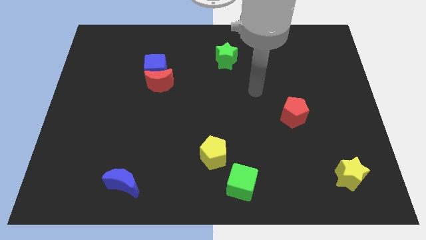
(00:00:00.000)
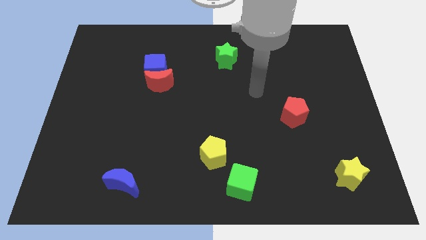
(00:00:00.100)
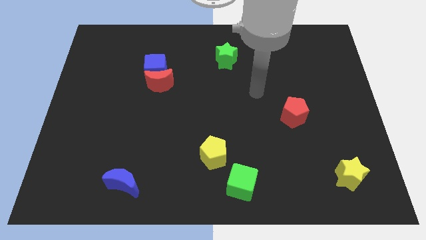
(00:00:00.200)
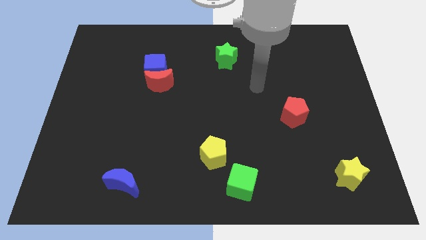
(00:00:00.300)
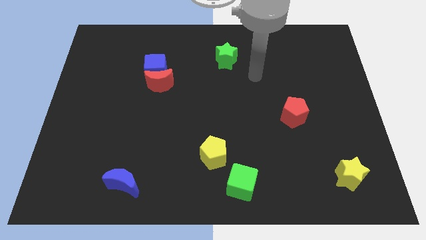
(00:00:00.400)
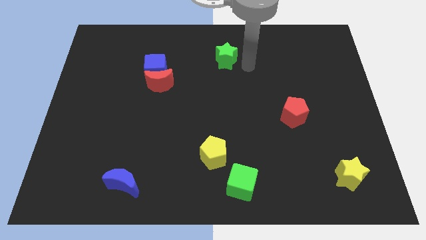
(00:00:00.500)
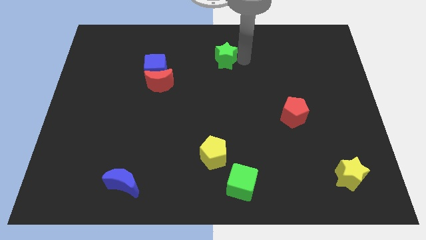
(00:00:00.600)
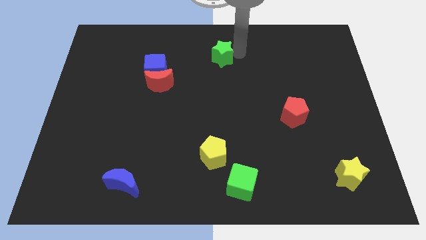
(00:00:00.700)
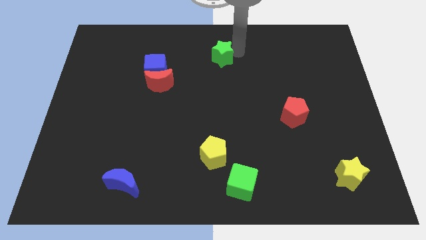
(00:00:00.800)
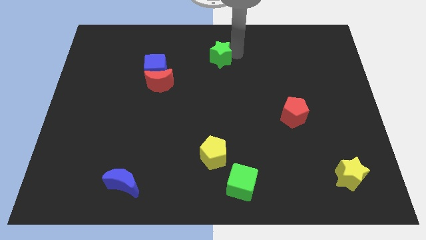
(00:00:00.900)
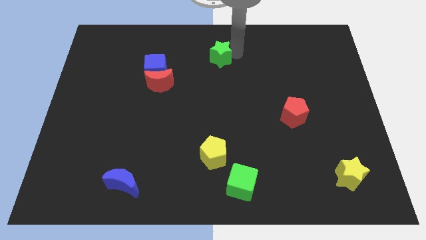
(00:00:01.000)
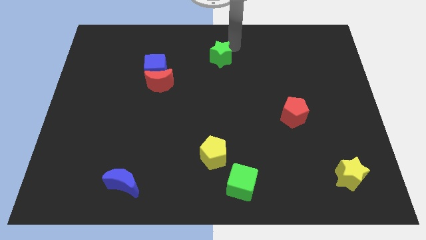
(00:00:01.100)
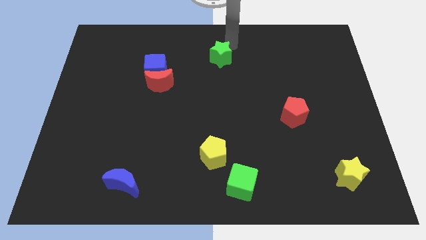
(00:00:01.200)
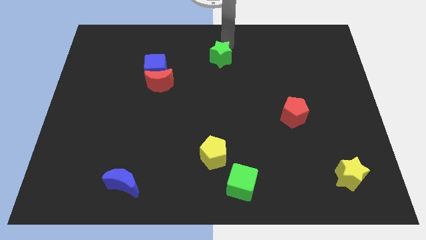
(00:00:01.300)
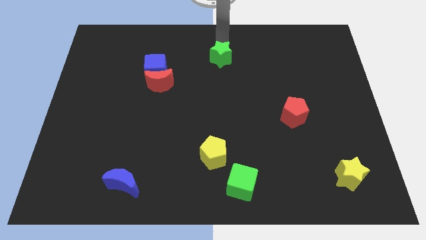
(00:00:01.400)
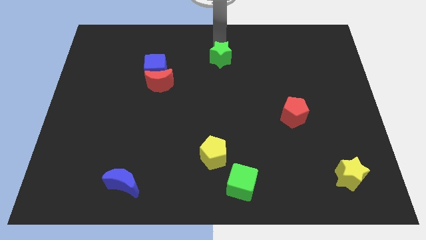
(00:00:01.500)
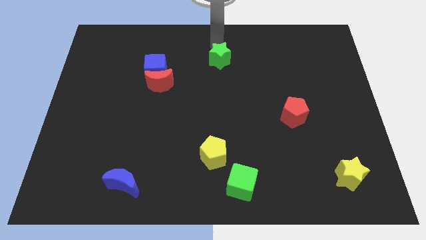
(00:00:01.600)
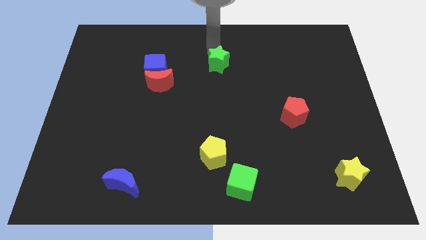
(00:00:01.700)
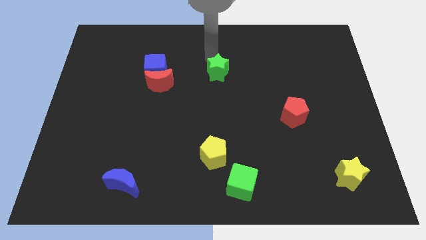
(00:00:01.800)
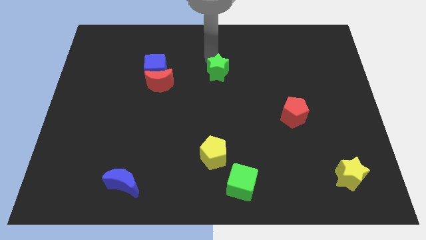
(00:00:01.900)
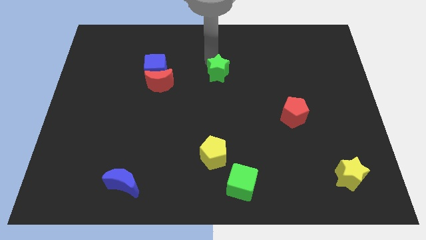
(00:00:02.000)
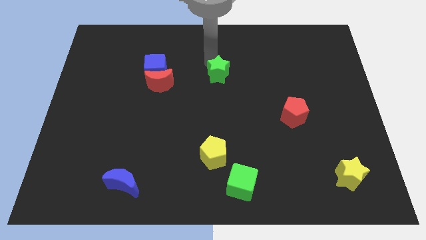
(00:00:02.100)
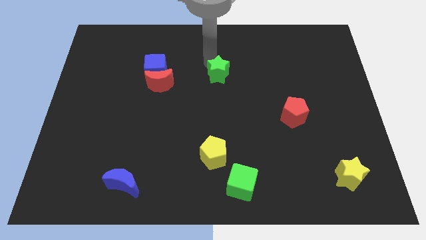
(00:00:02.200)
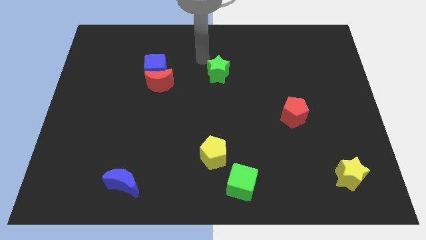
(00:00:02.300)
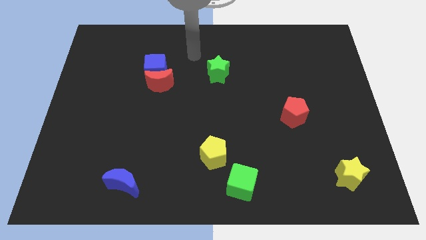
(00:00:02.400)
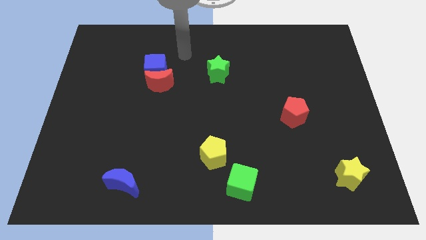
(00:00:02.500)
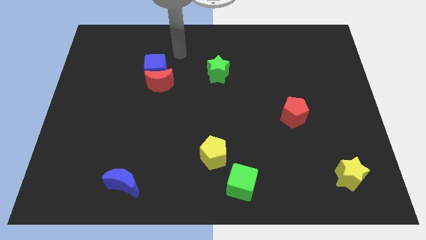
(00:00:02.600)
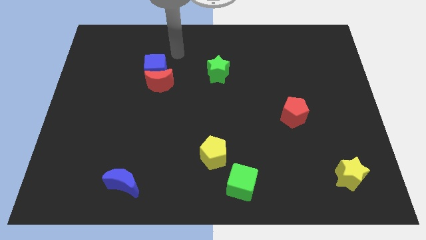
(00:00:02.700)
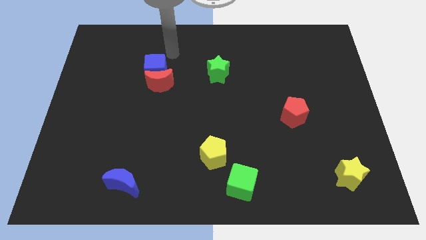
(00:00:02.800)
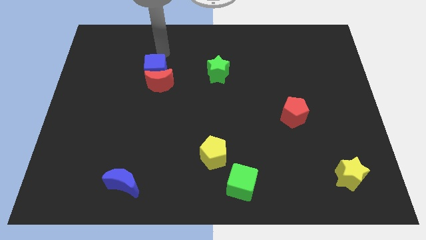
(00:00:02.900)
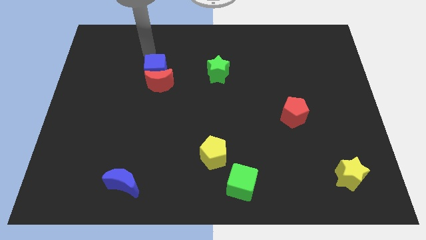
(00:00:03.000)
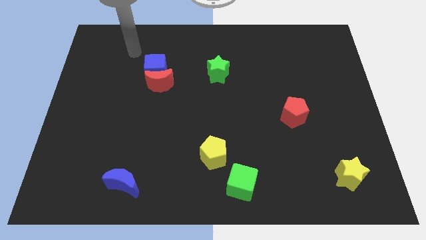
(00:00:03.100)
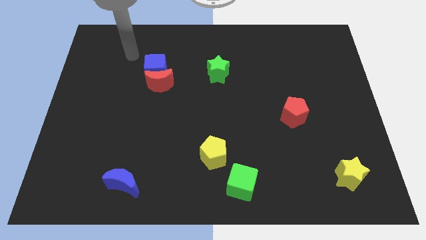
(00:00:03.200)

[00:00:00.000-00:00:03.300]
push slightly the green star downwards

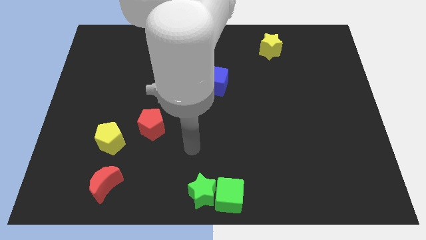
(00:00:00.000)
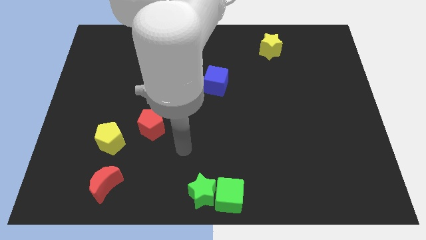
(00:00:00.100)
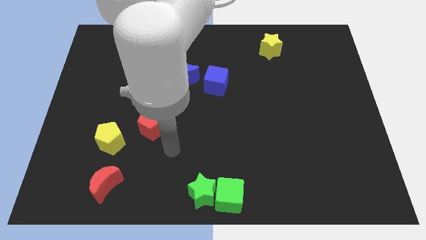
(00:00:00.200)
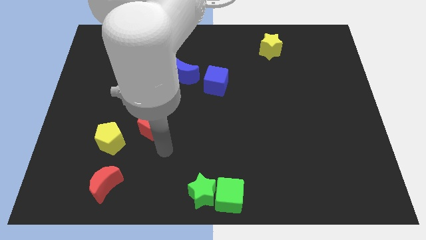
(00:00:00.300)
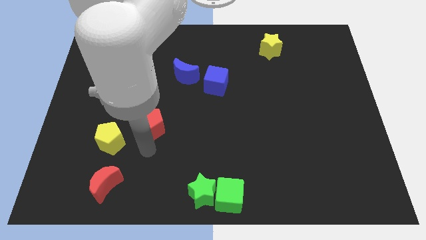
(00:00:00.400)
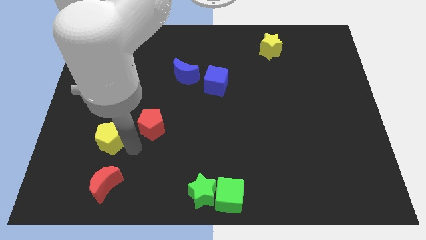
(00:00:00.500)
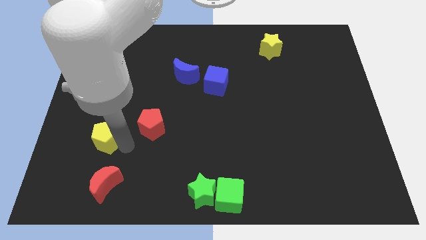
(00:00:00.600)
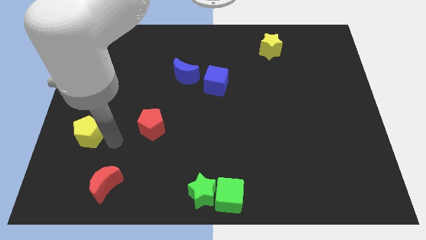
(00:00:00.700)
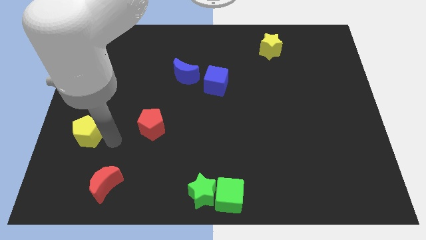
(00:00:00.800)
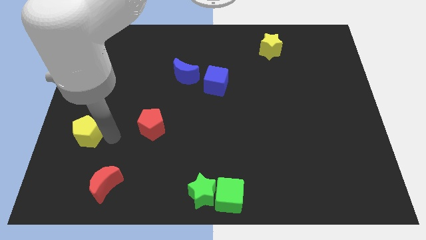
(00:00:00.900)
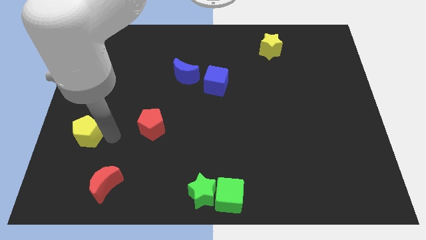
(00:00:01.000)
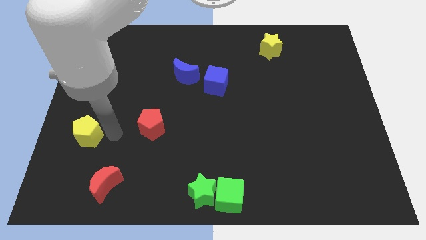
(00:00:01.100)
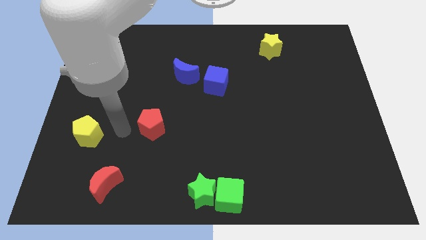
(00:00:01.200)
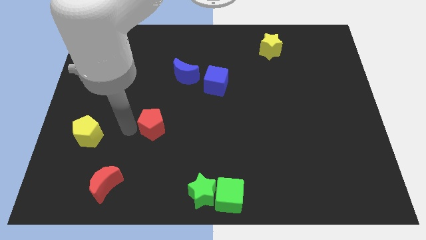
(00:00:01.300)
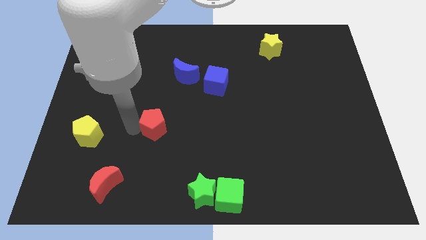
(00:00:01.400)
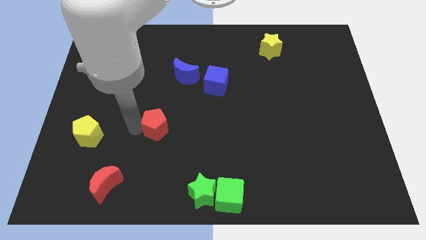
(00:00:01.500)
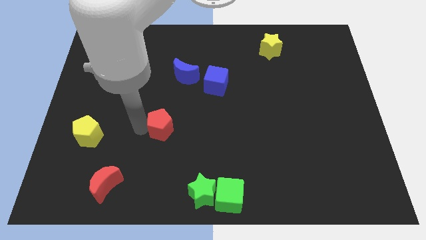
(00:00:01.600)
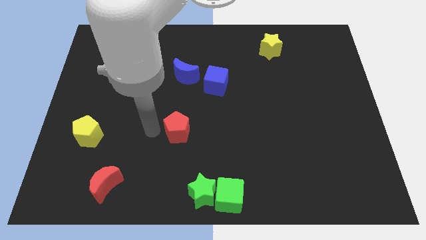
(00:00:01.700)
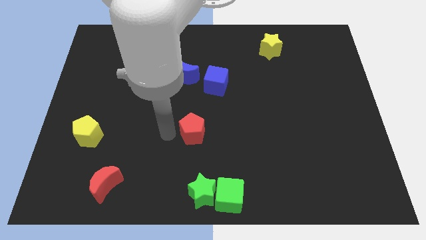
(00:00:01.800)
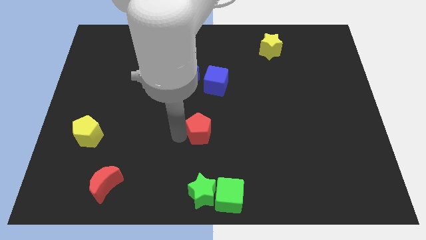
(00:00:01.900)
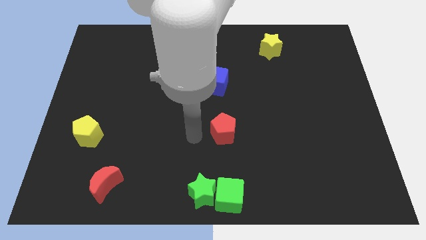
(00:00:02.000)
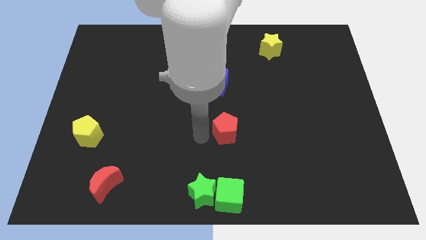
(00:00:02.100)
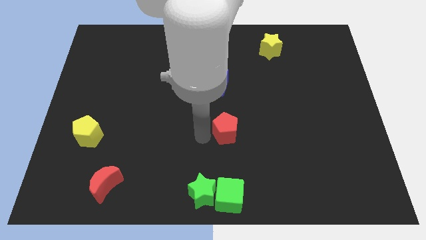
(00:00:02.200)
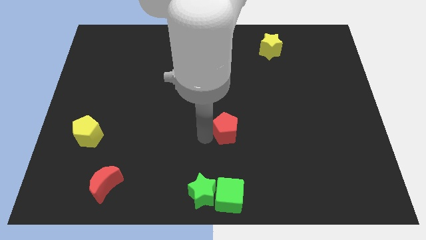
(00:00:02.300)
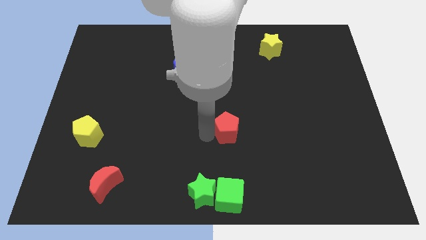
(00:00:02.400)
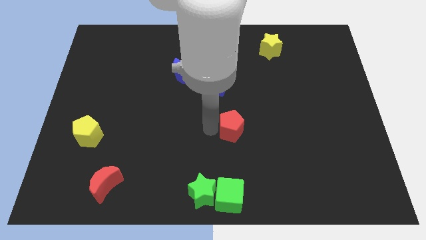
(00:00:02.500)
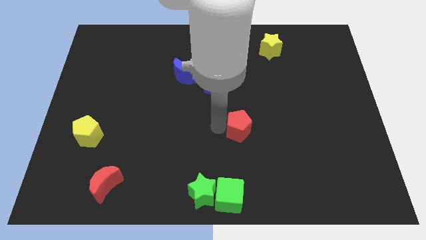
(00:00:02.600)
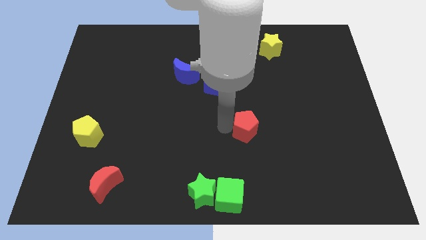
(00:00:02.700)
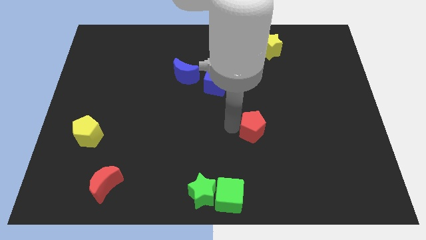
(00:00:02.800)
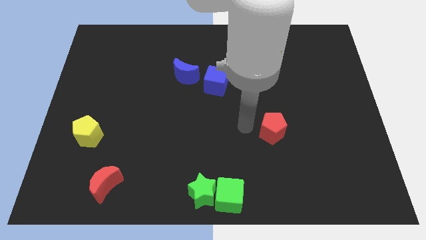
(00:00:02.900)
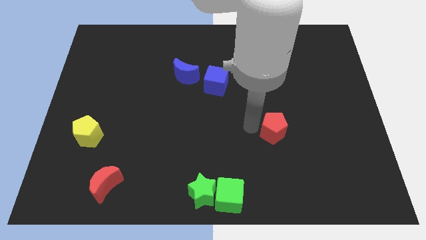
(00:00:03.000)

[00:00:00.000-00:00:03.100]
push red pentagon below yellow star

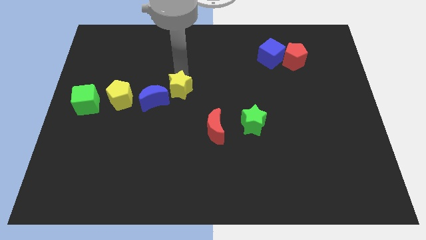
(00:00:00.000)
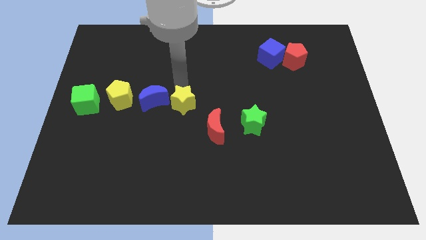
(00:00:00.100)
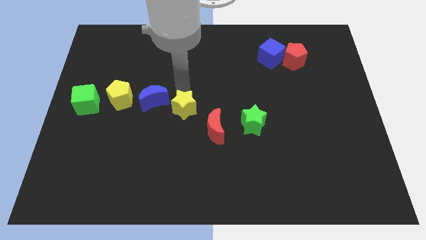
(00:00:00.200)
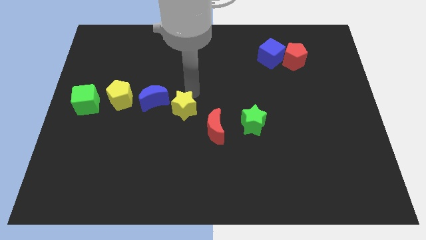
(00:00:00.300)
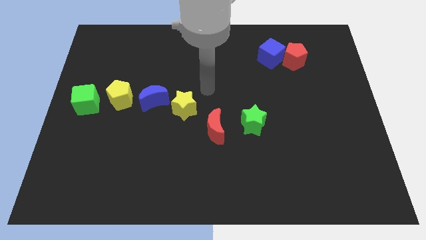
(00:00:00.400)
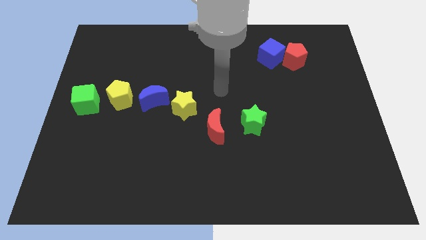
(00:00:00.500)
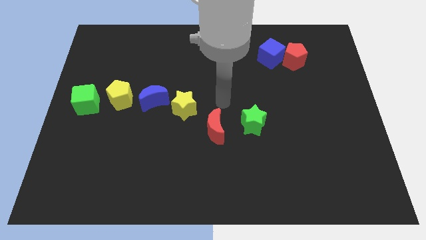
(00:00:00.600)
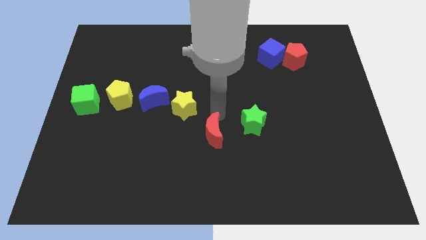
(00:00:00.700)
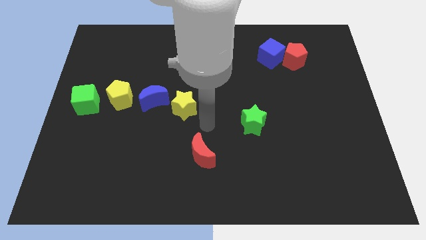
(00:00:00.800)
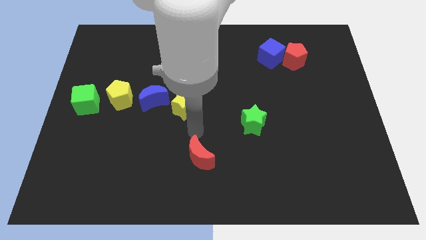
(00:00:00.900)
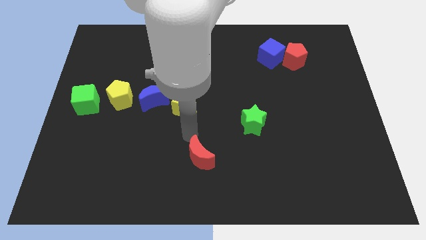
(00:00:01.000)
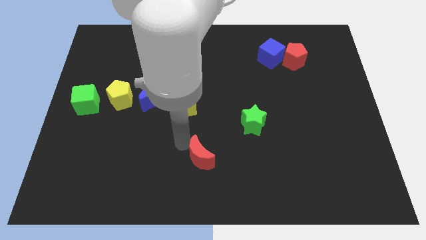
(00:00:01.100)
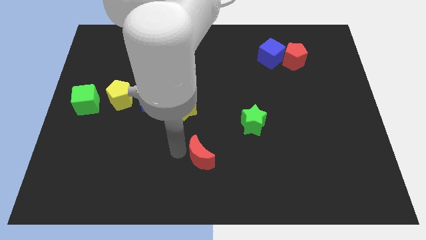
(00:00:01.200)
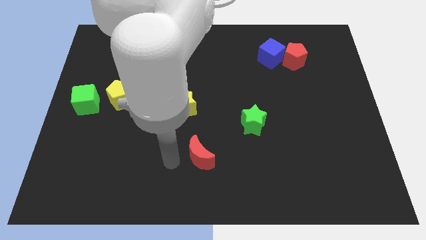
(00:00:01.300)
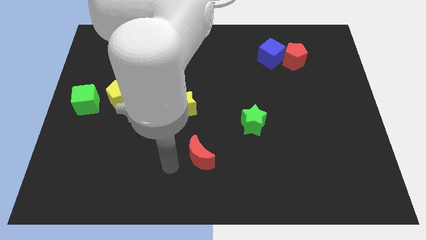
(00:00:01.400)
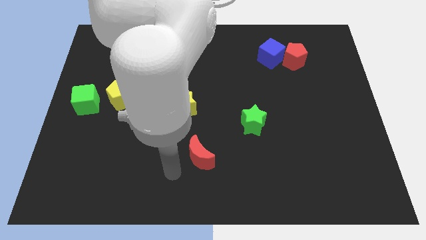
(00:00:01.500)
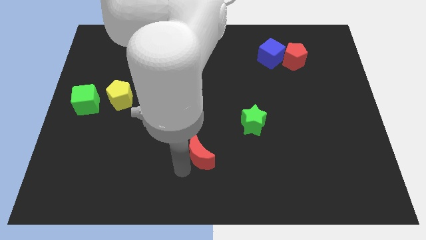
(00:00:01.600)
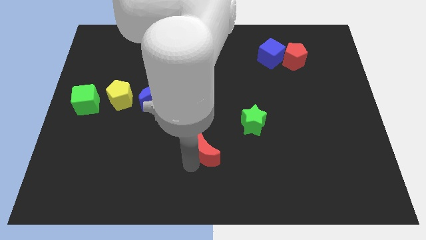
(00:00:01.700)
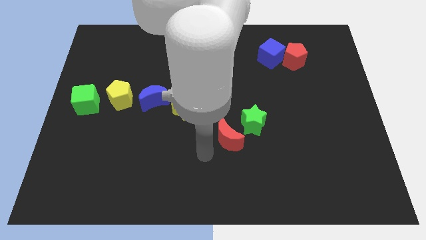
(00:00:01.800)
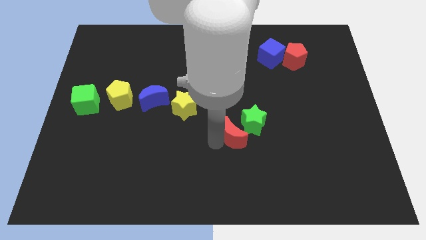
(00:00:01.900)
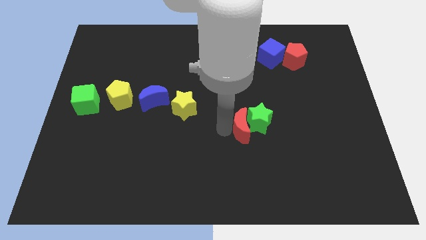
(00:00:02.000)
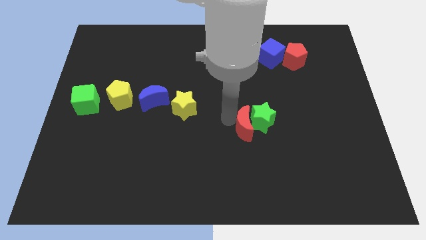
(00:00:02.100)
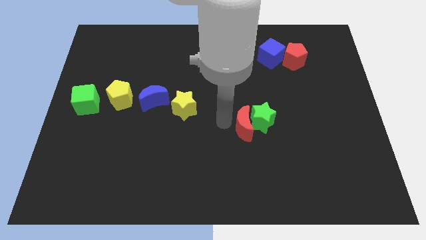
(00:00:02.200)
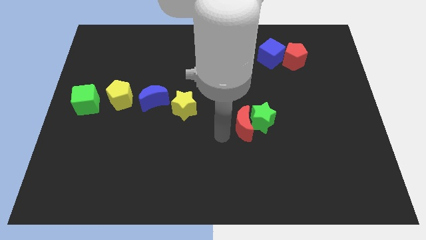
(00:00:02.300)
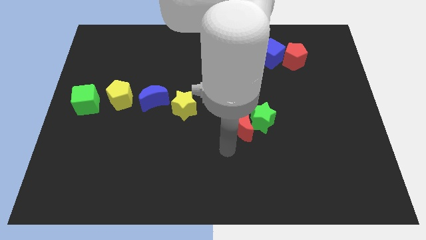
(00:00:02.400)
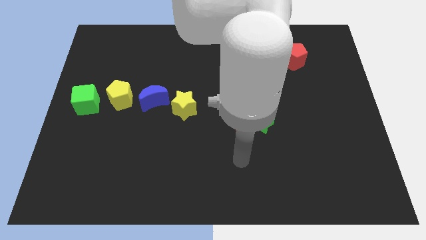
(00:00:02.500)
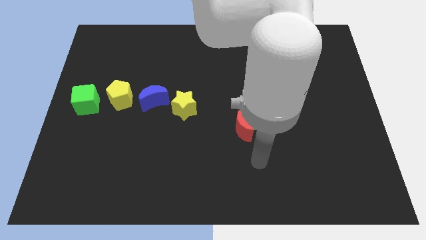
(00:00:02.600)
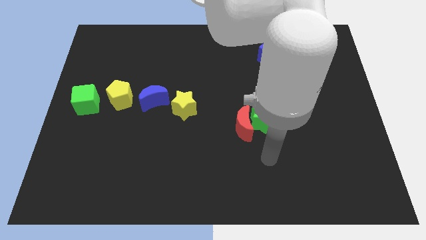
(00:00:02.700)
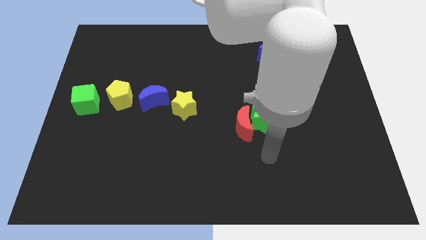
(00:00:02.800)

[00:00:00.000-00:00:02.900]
push red moon left to the green star
